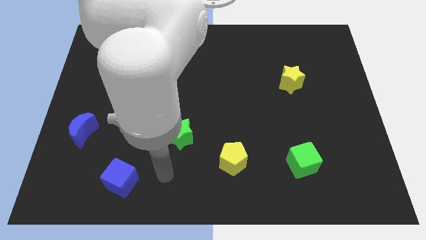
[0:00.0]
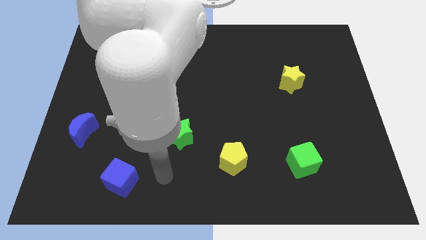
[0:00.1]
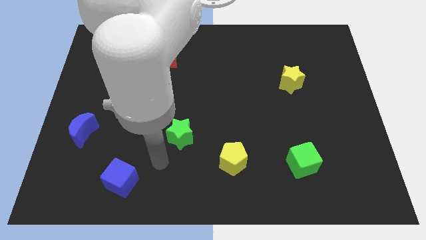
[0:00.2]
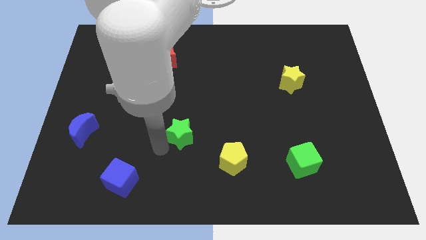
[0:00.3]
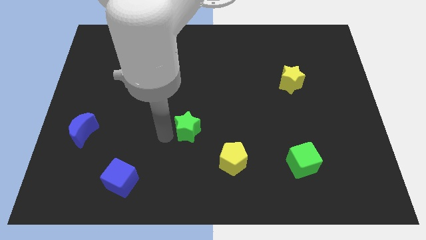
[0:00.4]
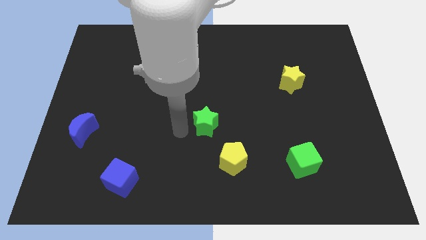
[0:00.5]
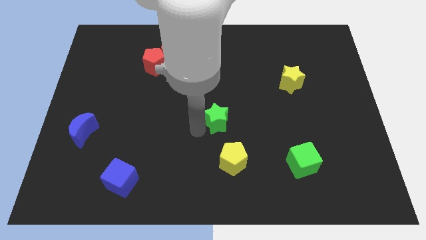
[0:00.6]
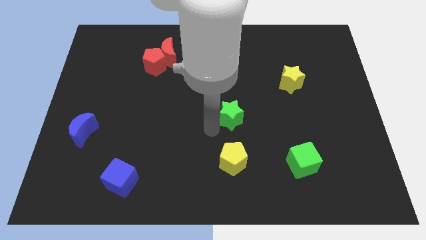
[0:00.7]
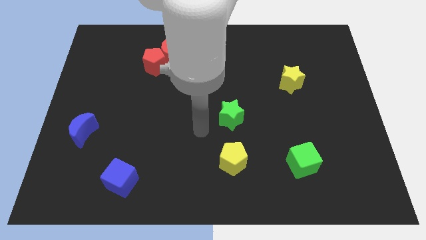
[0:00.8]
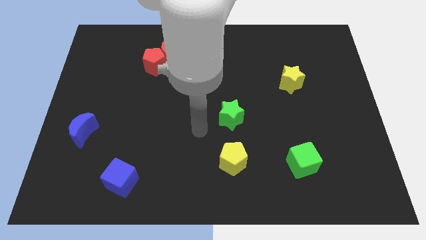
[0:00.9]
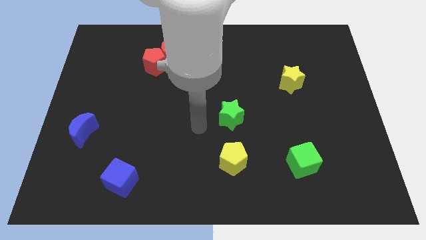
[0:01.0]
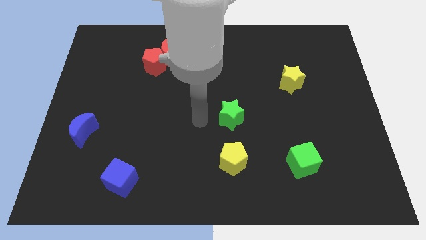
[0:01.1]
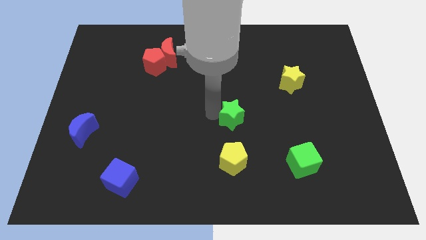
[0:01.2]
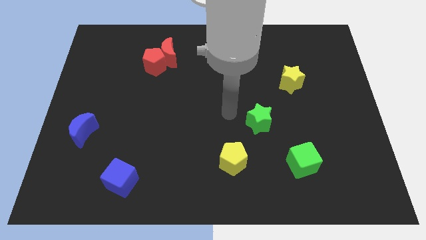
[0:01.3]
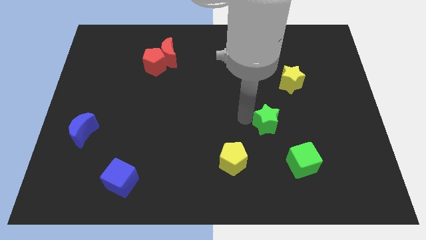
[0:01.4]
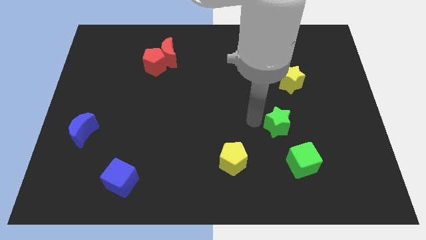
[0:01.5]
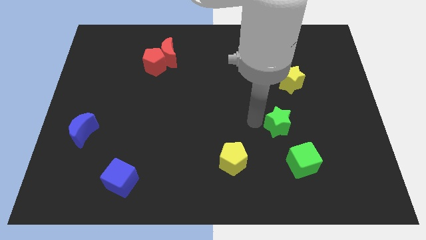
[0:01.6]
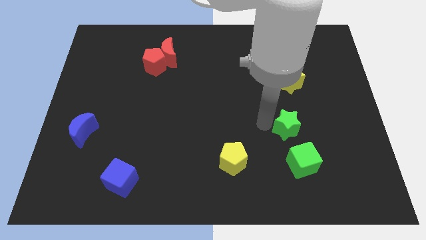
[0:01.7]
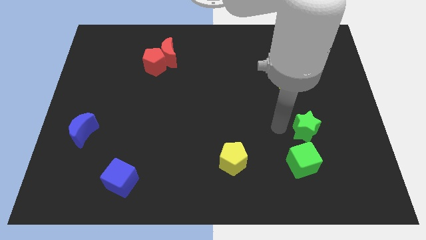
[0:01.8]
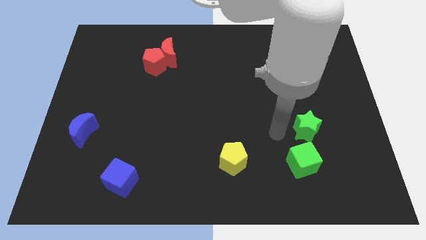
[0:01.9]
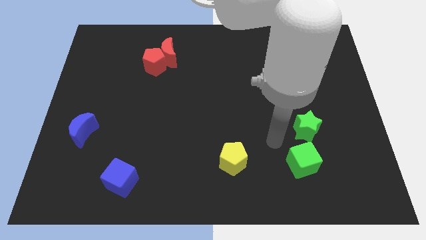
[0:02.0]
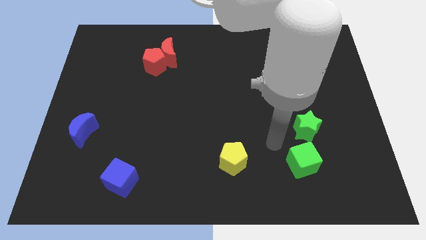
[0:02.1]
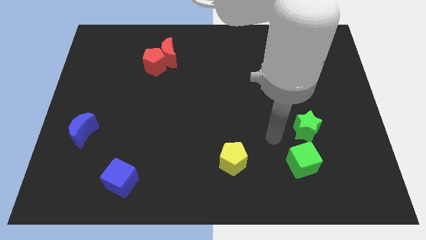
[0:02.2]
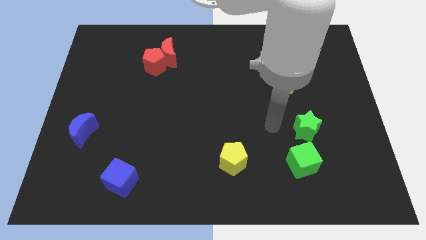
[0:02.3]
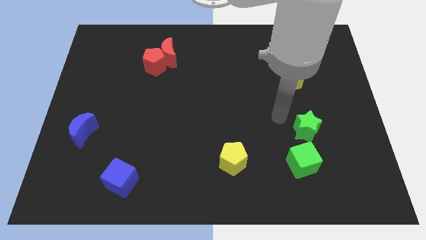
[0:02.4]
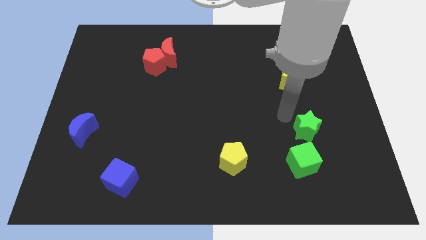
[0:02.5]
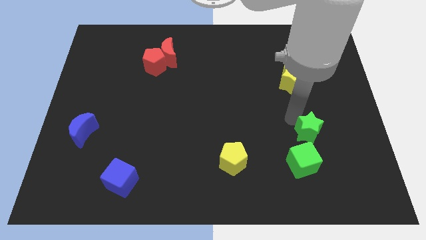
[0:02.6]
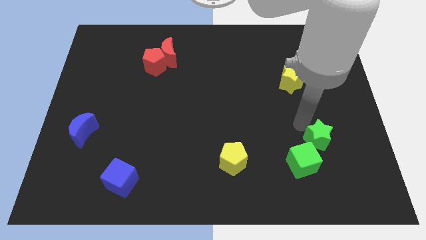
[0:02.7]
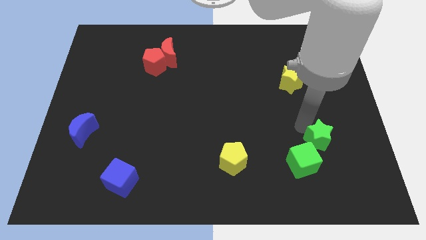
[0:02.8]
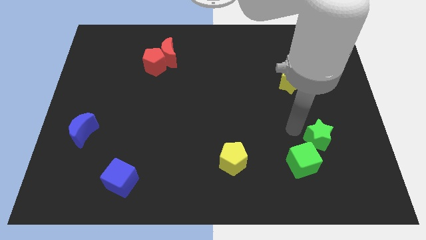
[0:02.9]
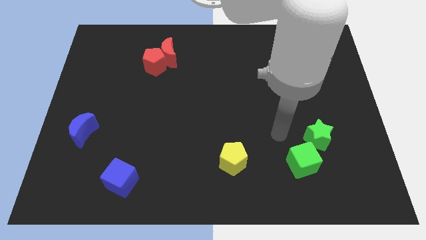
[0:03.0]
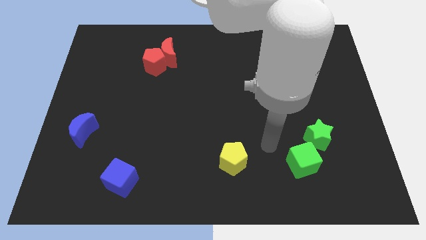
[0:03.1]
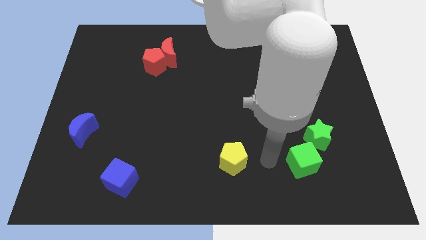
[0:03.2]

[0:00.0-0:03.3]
push green star to the top right side of green cube

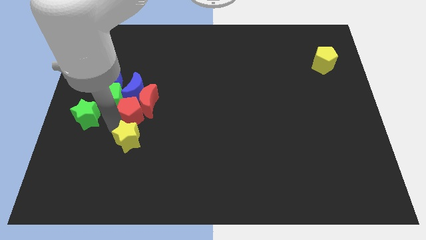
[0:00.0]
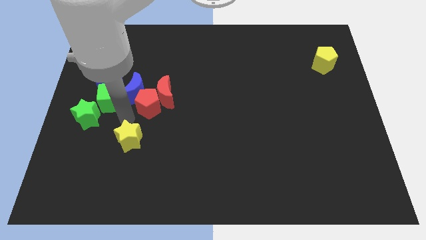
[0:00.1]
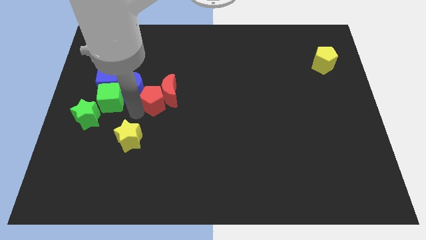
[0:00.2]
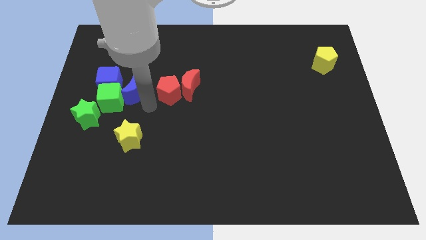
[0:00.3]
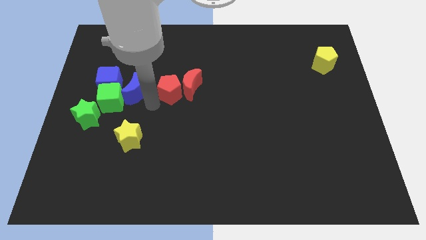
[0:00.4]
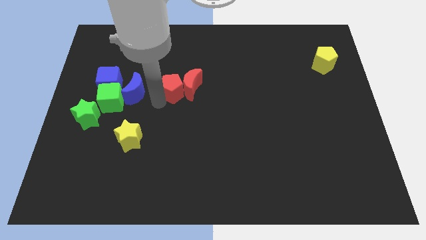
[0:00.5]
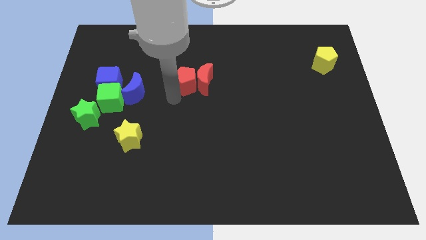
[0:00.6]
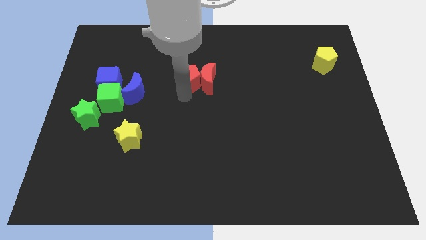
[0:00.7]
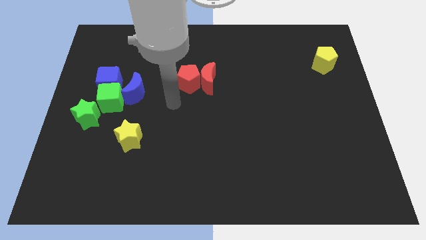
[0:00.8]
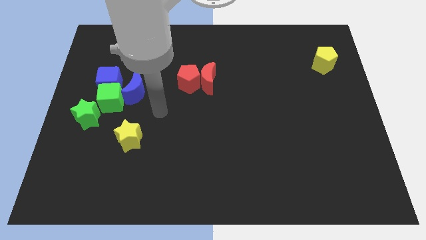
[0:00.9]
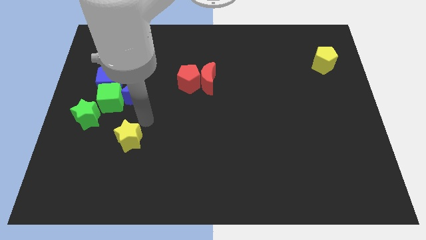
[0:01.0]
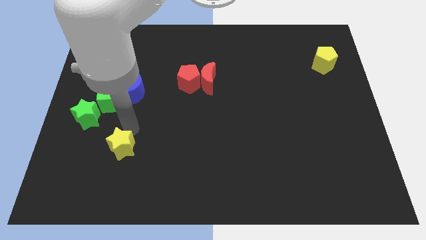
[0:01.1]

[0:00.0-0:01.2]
separate red moon and red pentagon from the group of blocks

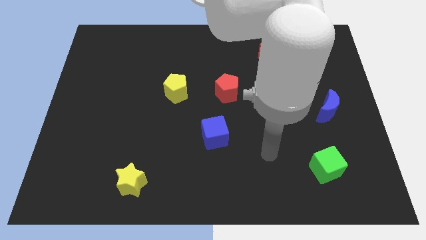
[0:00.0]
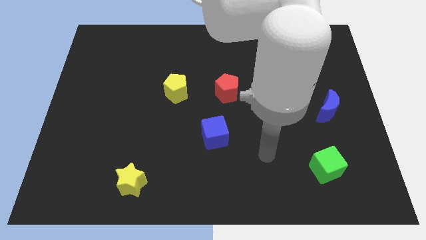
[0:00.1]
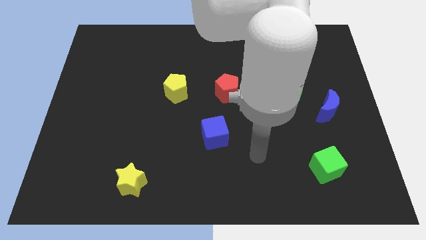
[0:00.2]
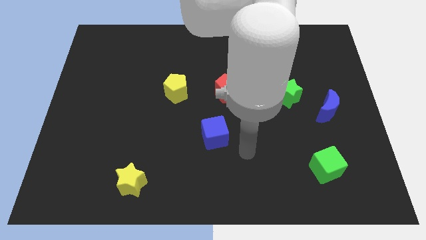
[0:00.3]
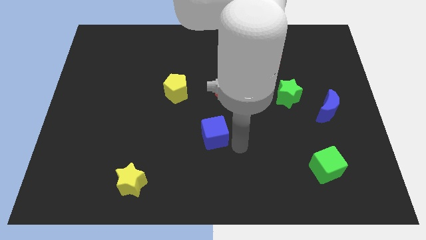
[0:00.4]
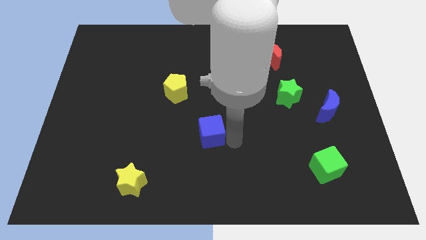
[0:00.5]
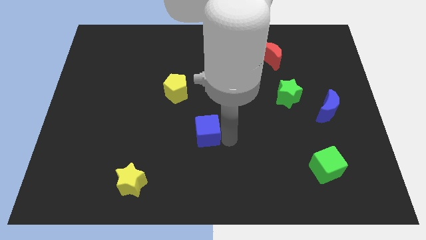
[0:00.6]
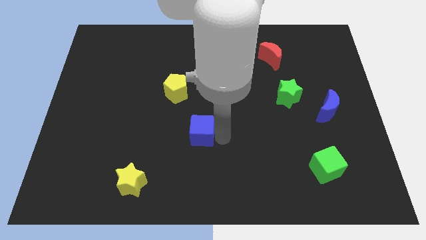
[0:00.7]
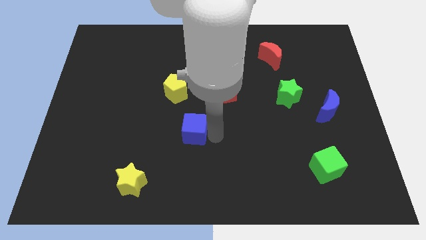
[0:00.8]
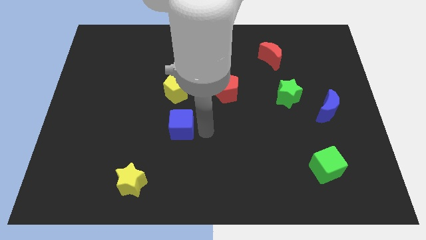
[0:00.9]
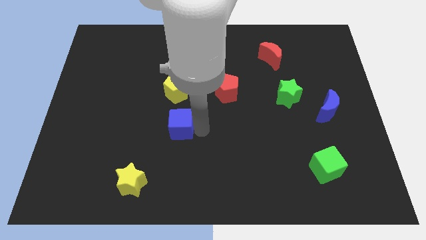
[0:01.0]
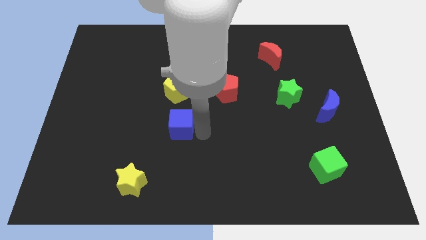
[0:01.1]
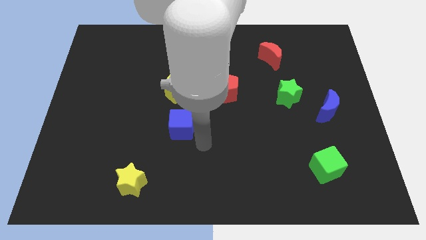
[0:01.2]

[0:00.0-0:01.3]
push blue cube towards the left side

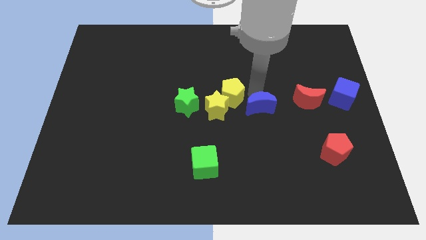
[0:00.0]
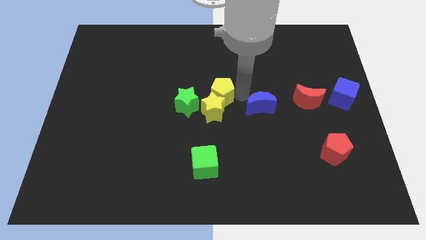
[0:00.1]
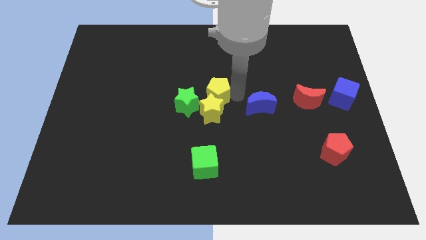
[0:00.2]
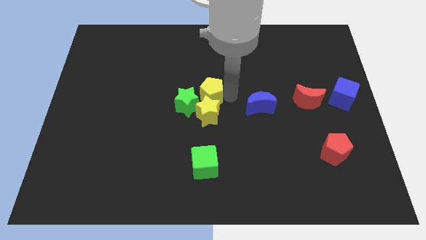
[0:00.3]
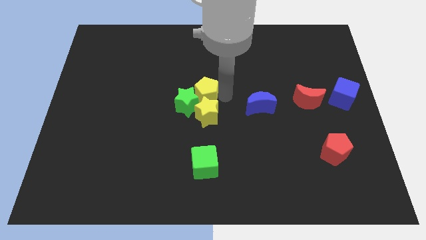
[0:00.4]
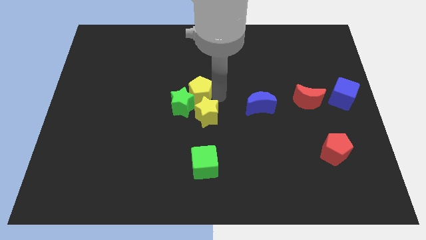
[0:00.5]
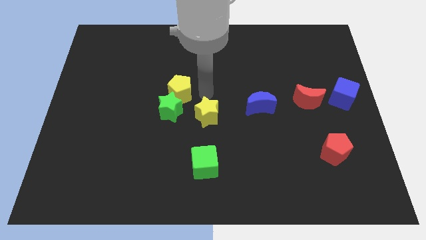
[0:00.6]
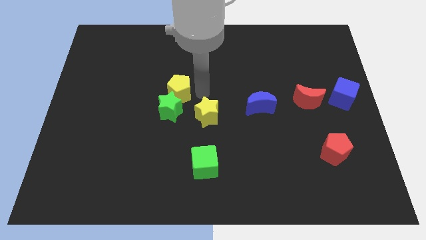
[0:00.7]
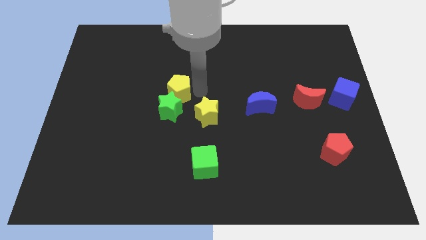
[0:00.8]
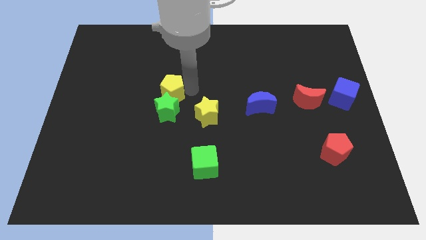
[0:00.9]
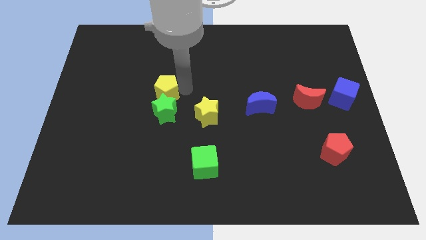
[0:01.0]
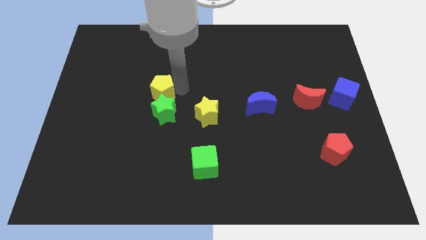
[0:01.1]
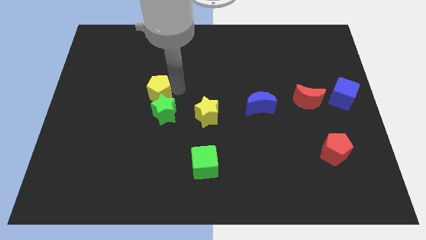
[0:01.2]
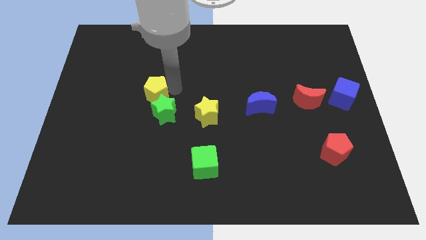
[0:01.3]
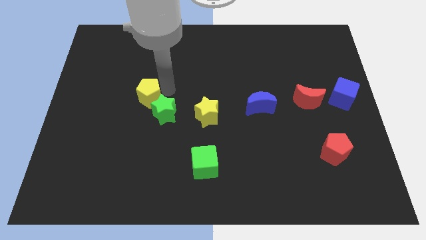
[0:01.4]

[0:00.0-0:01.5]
push the yellow pentagon to the left

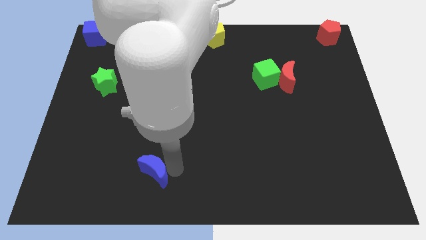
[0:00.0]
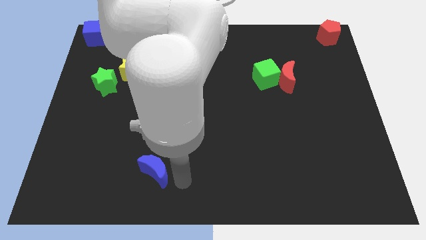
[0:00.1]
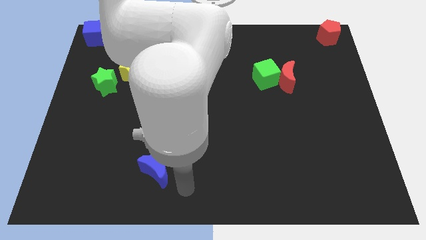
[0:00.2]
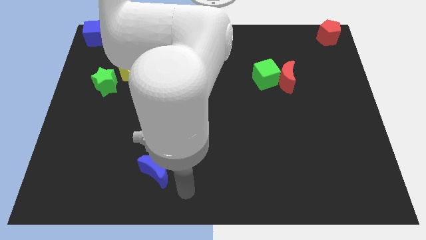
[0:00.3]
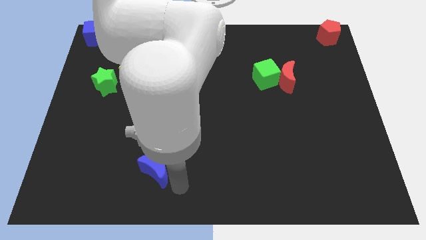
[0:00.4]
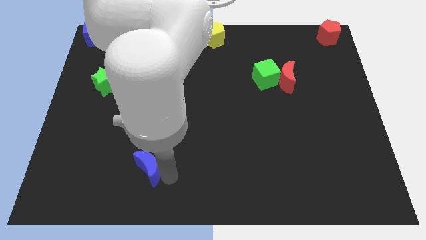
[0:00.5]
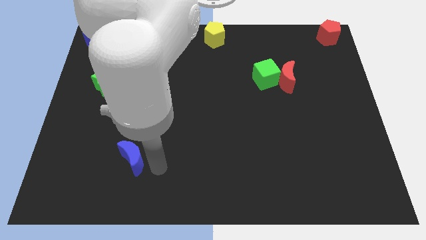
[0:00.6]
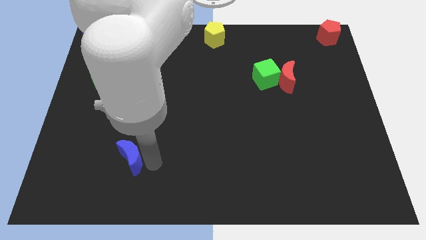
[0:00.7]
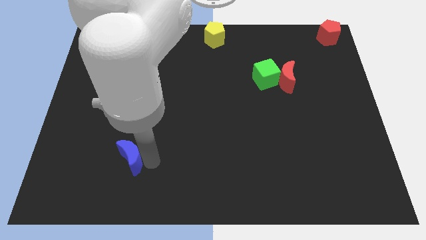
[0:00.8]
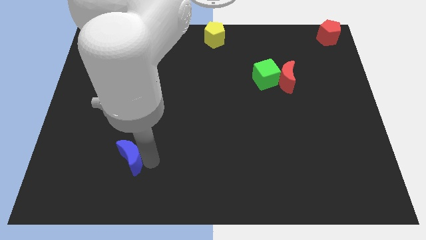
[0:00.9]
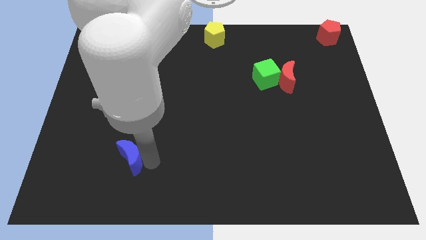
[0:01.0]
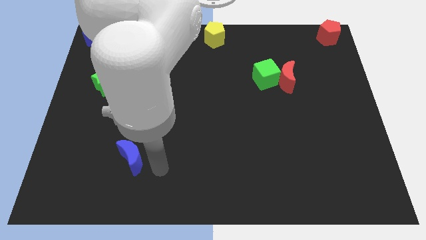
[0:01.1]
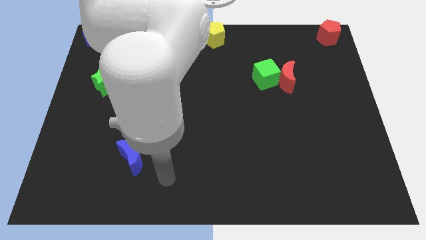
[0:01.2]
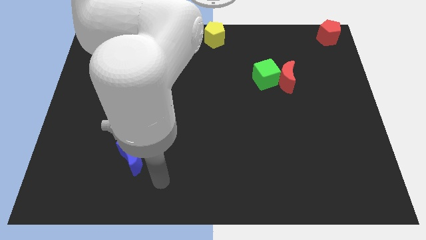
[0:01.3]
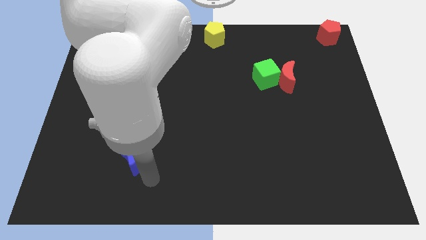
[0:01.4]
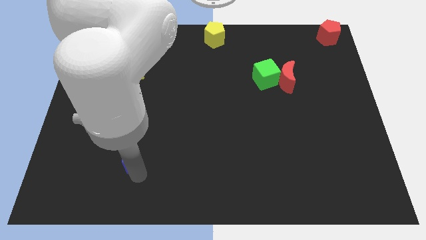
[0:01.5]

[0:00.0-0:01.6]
move the blue crescent to the left of the board

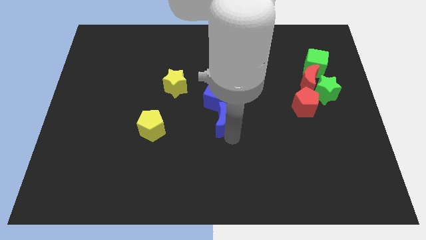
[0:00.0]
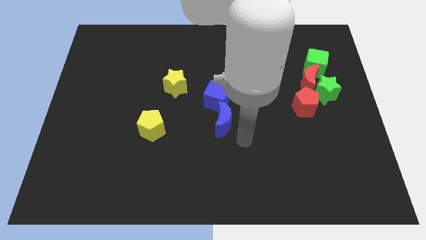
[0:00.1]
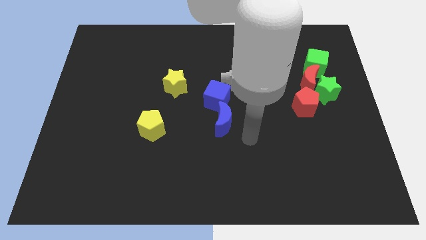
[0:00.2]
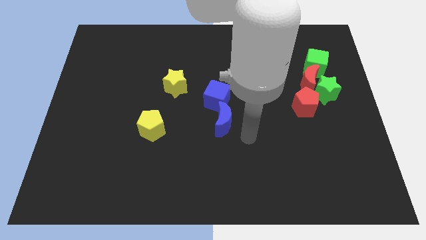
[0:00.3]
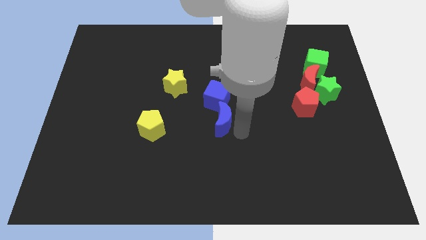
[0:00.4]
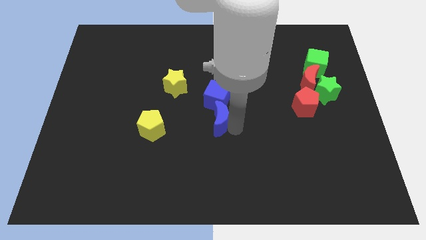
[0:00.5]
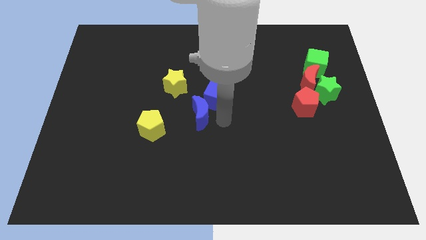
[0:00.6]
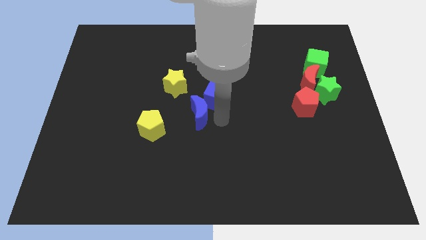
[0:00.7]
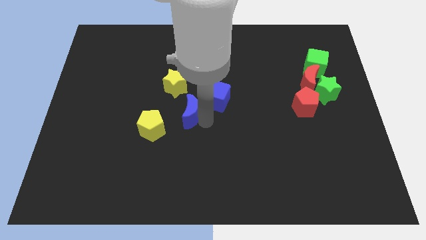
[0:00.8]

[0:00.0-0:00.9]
move blue moon slightly left
